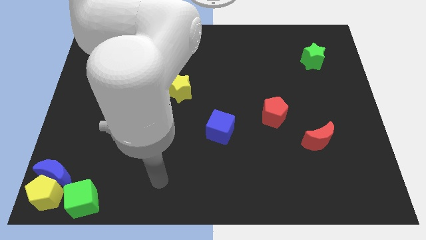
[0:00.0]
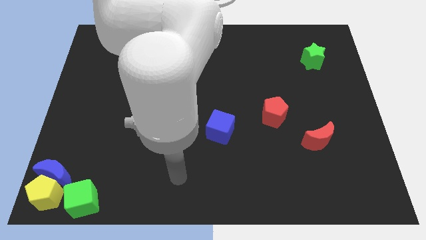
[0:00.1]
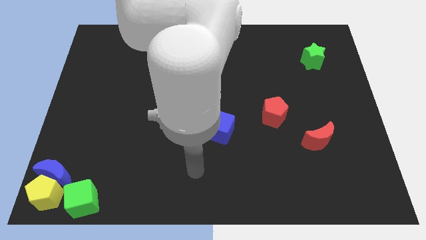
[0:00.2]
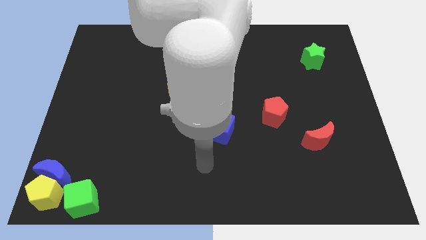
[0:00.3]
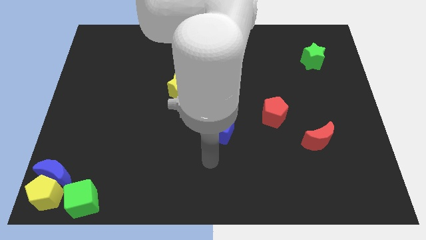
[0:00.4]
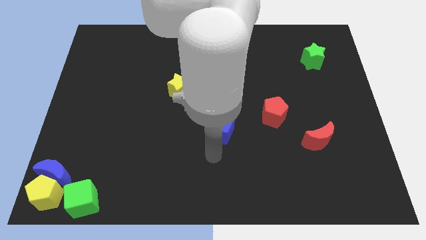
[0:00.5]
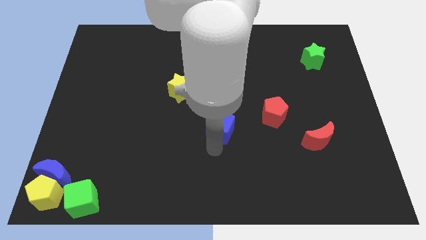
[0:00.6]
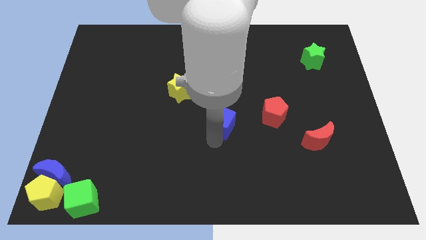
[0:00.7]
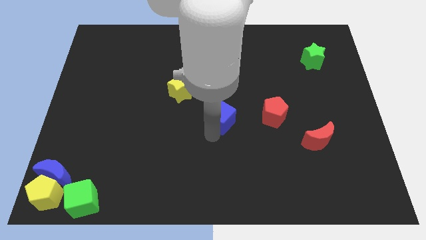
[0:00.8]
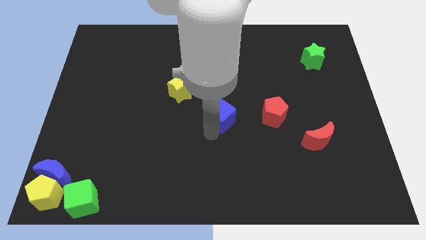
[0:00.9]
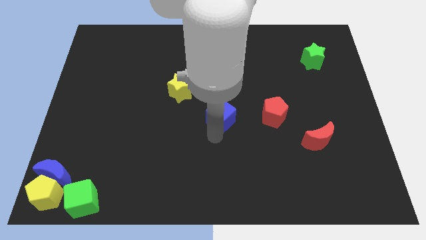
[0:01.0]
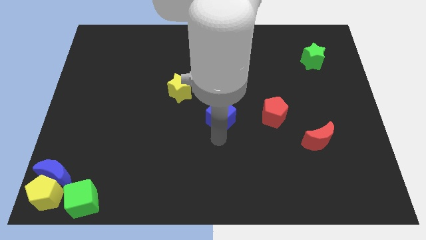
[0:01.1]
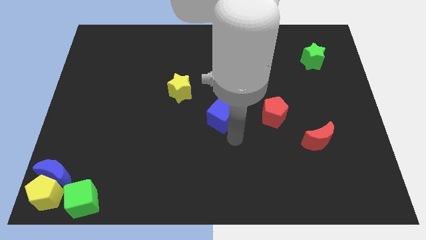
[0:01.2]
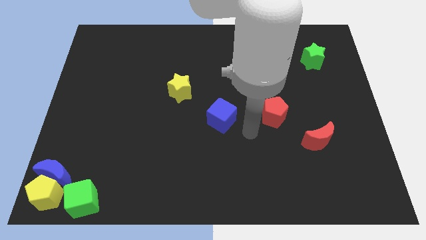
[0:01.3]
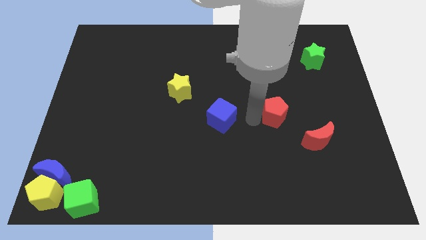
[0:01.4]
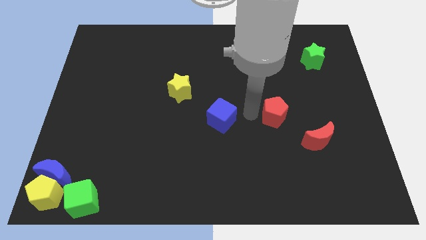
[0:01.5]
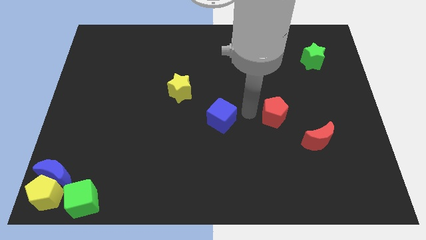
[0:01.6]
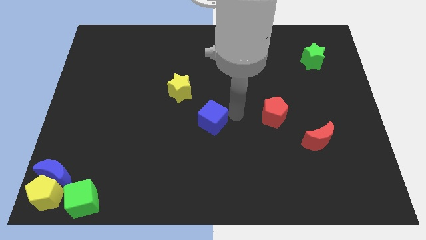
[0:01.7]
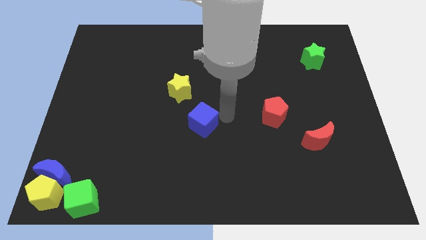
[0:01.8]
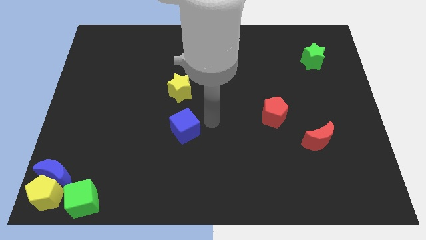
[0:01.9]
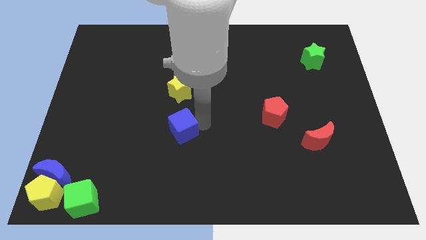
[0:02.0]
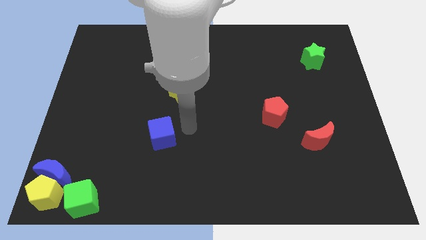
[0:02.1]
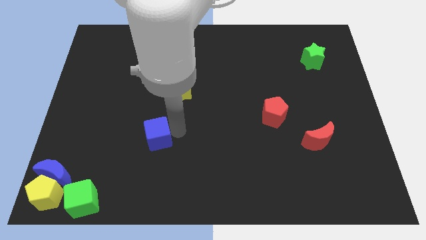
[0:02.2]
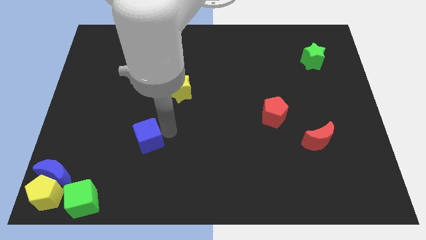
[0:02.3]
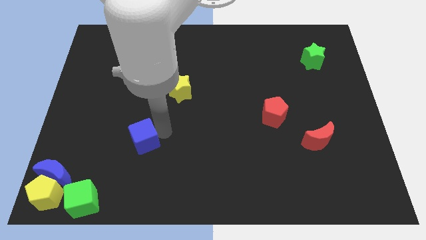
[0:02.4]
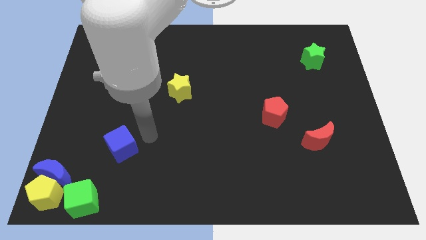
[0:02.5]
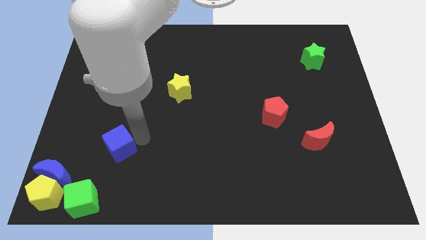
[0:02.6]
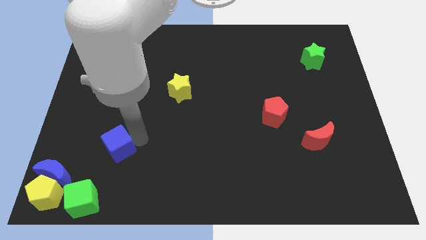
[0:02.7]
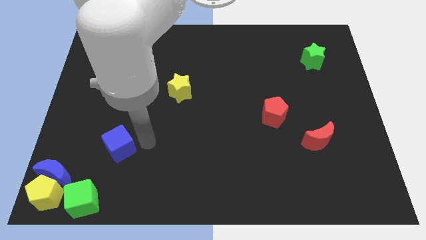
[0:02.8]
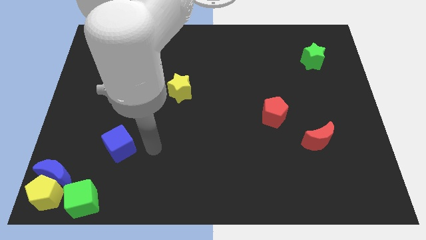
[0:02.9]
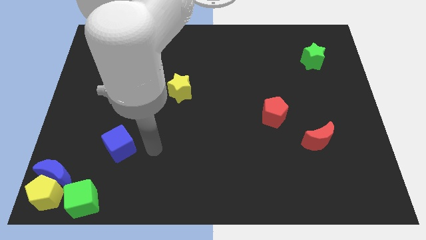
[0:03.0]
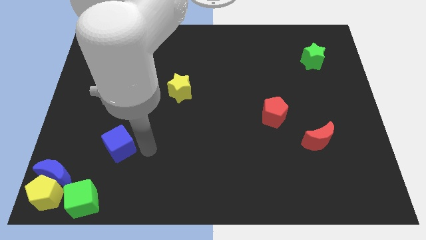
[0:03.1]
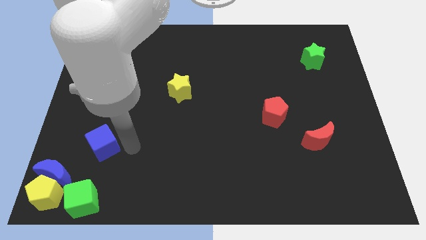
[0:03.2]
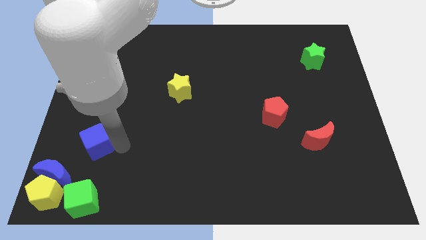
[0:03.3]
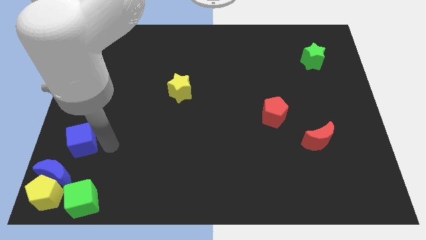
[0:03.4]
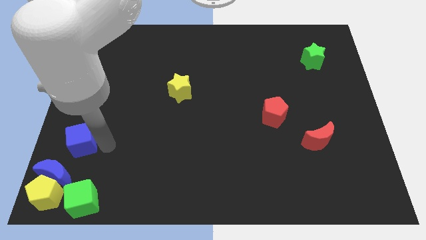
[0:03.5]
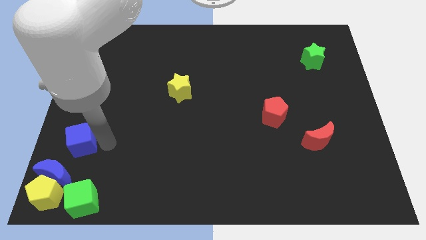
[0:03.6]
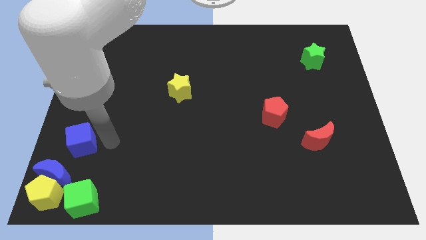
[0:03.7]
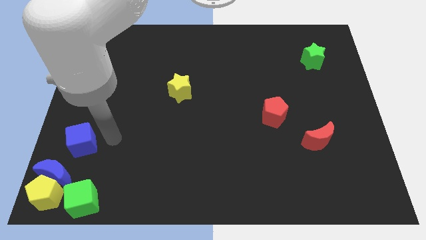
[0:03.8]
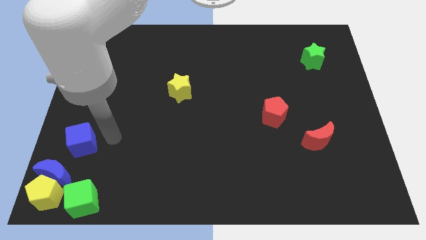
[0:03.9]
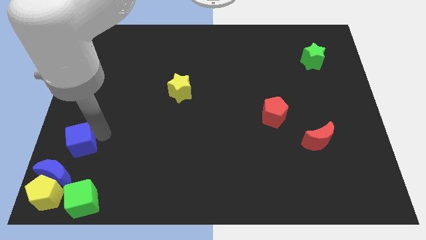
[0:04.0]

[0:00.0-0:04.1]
slide blue cube above green cube

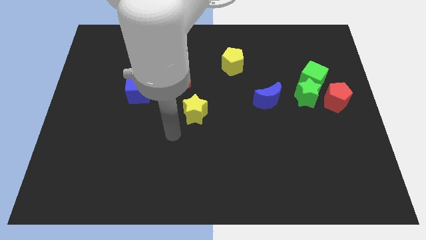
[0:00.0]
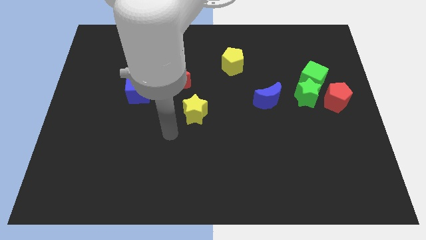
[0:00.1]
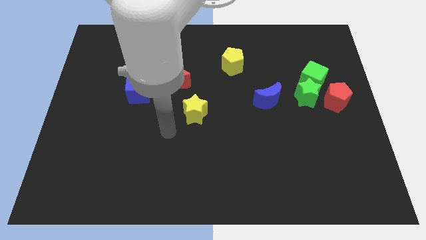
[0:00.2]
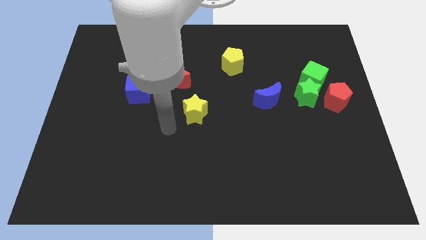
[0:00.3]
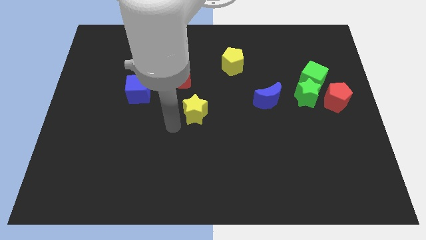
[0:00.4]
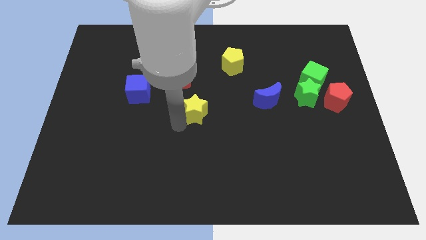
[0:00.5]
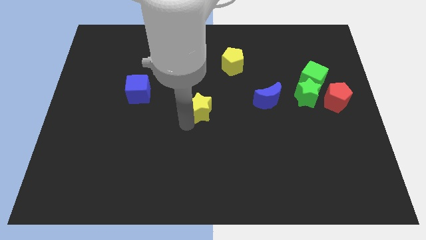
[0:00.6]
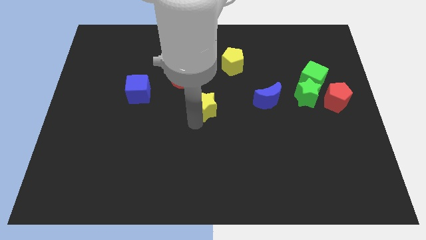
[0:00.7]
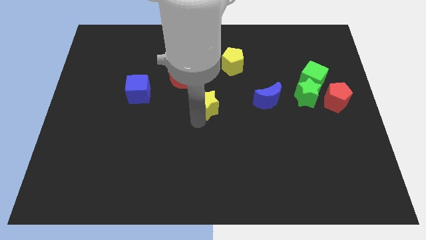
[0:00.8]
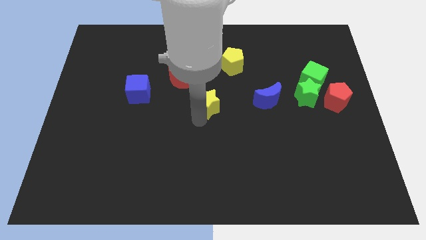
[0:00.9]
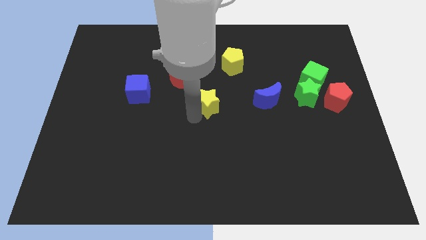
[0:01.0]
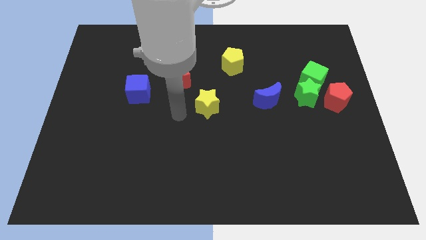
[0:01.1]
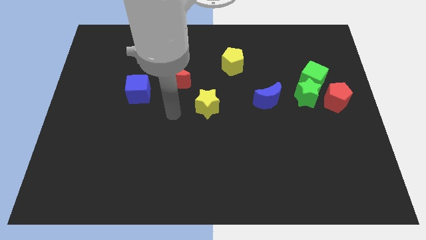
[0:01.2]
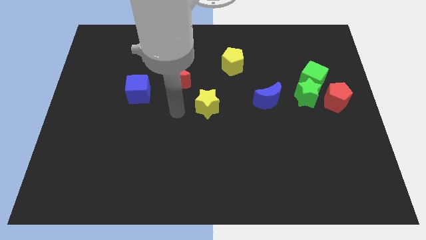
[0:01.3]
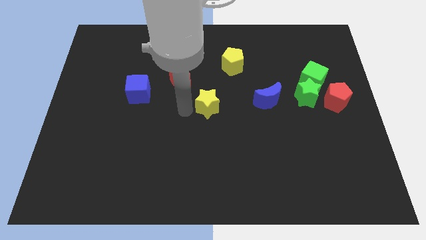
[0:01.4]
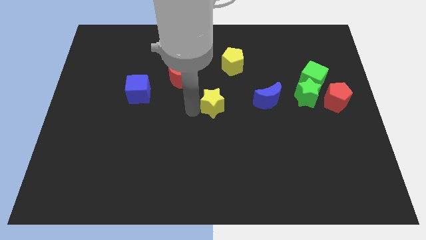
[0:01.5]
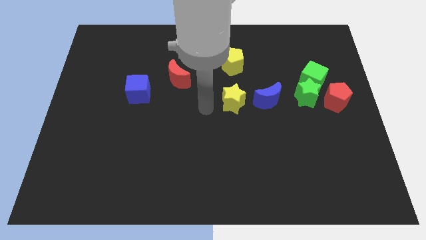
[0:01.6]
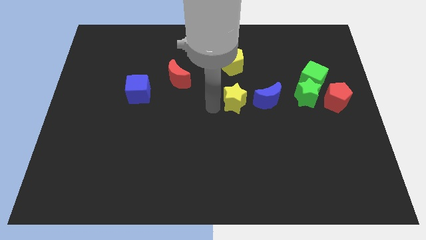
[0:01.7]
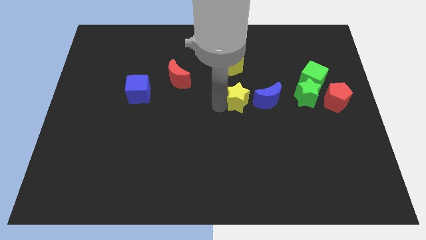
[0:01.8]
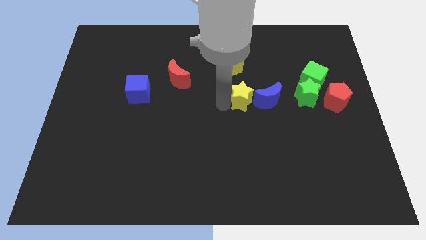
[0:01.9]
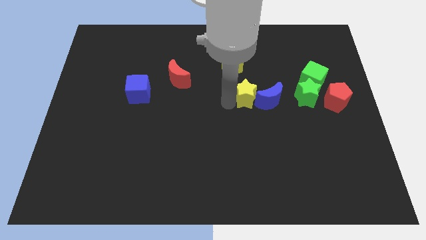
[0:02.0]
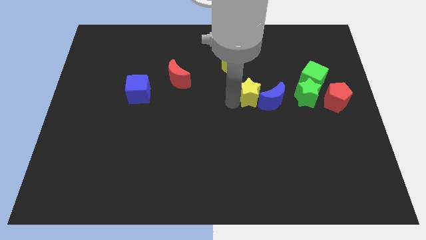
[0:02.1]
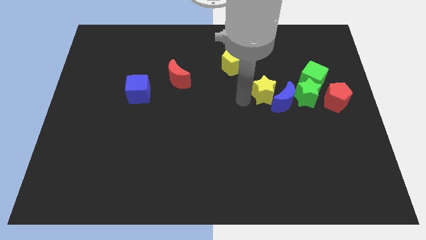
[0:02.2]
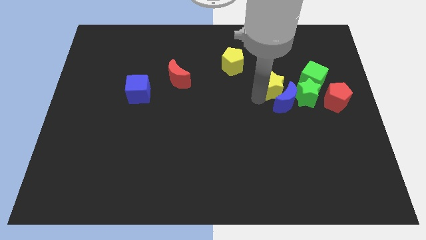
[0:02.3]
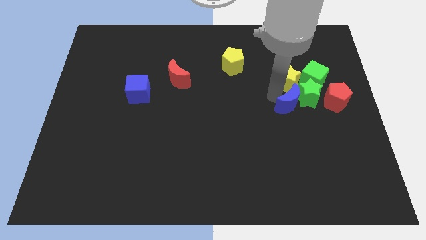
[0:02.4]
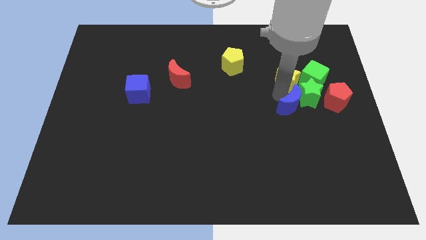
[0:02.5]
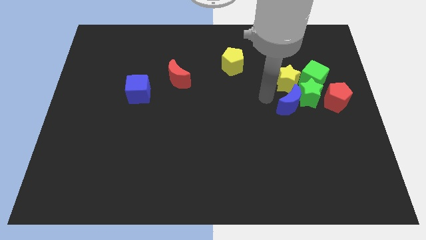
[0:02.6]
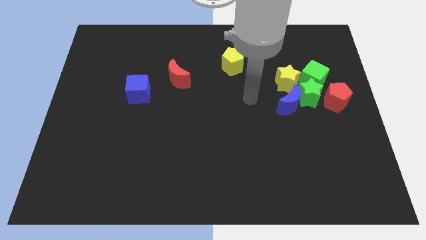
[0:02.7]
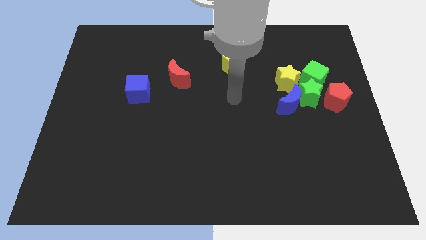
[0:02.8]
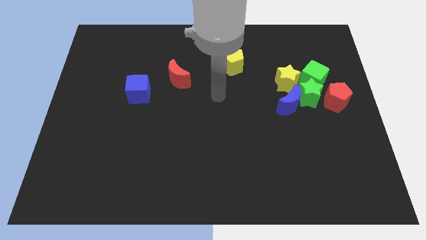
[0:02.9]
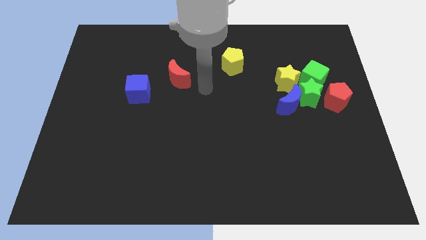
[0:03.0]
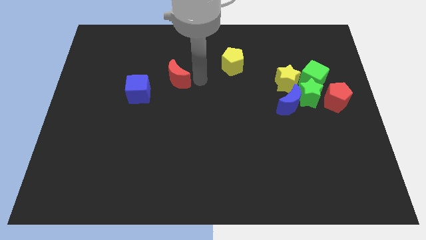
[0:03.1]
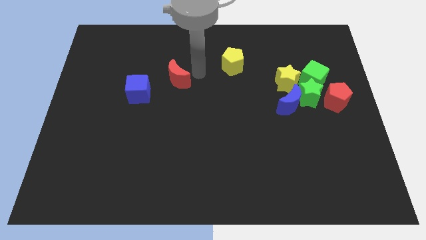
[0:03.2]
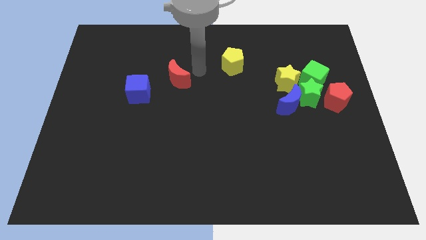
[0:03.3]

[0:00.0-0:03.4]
push the yellow star into the green cube

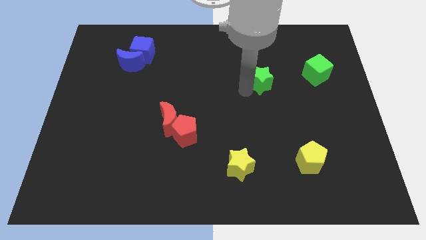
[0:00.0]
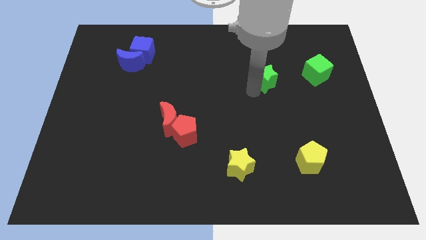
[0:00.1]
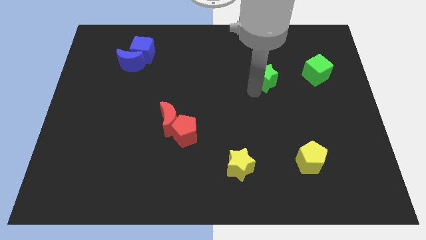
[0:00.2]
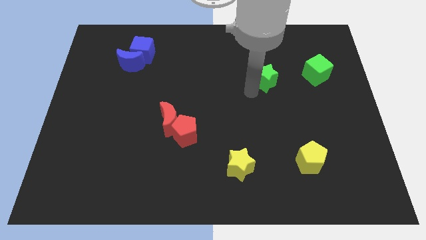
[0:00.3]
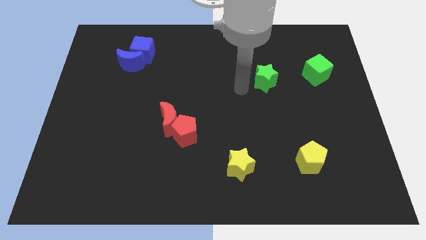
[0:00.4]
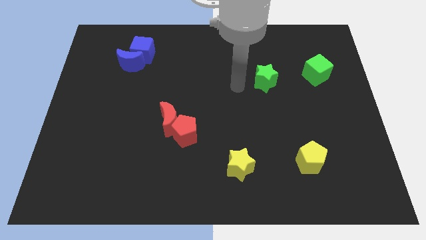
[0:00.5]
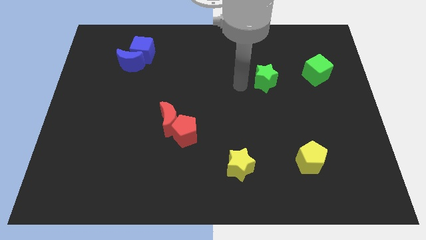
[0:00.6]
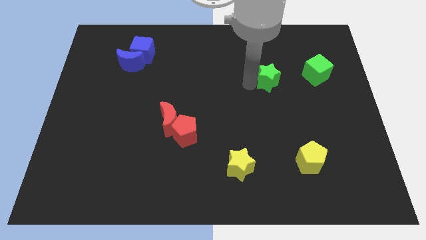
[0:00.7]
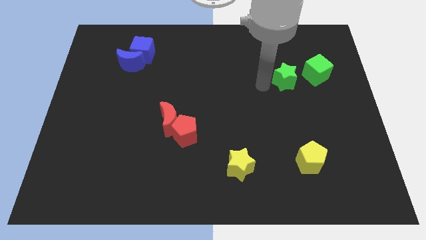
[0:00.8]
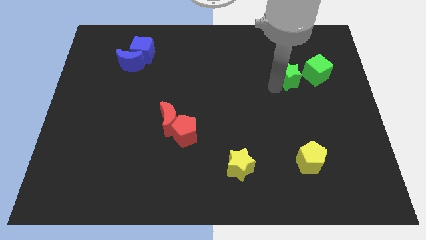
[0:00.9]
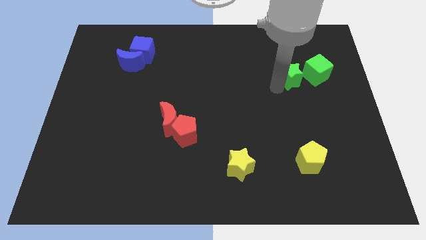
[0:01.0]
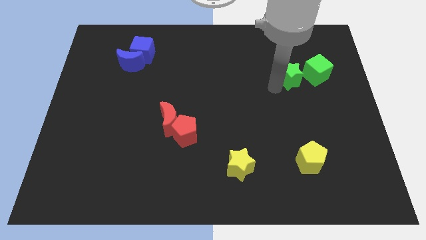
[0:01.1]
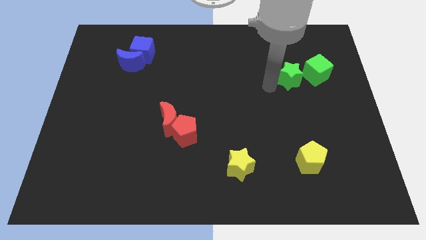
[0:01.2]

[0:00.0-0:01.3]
place the green star towards the left side of the green cube

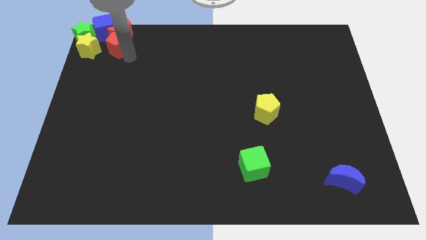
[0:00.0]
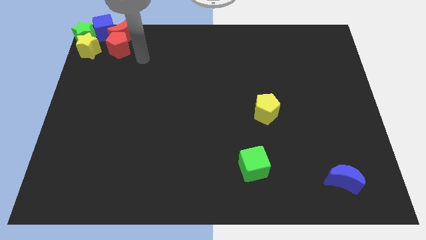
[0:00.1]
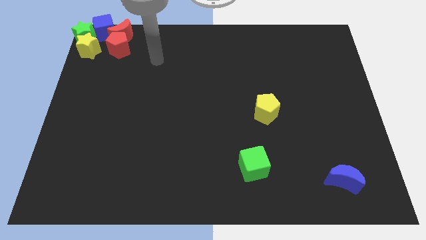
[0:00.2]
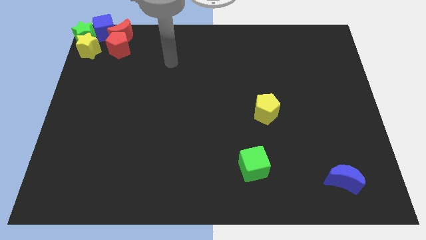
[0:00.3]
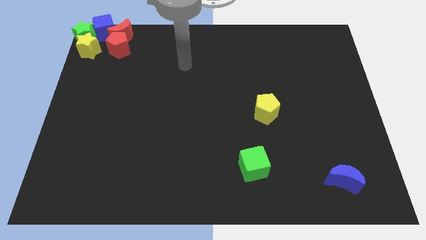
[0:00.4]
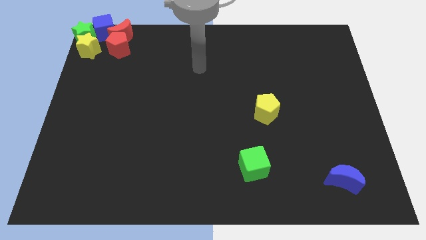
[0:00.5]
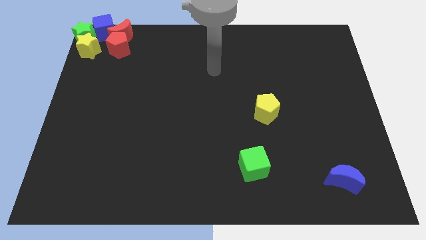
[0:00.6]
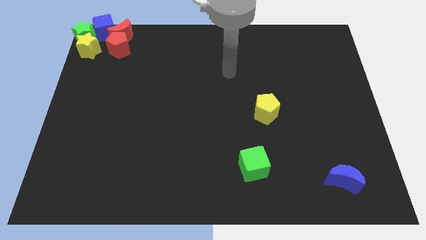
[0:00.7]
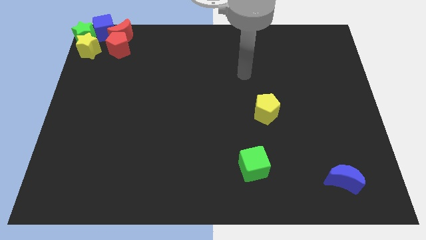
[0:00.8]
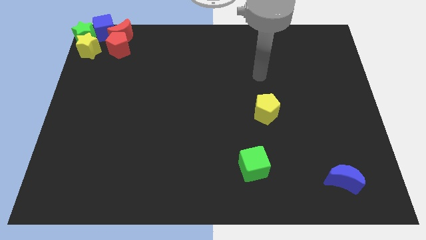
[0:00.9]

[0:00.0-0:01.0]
move your arm away from red pentagon
